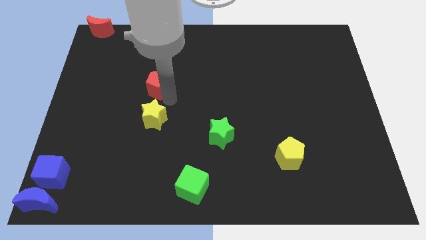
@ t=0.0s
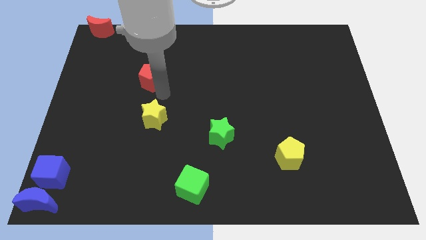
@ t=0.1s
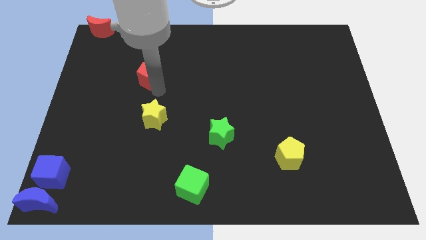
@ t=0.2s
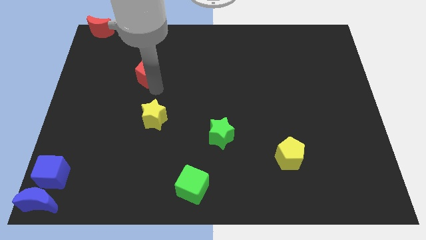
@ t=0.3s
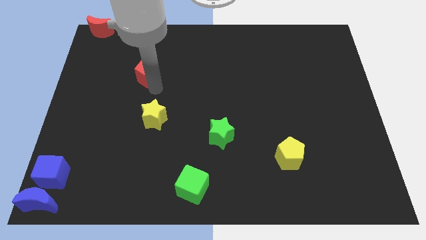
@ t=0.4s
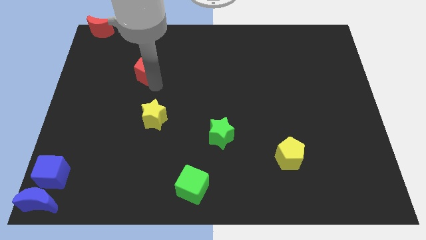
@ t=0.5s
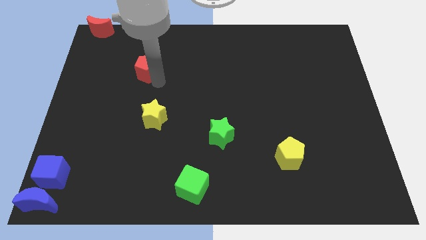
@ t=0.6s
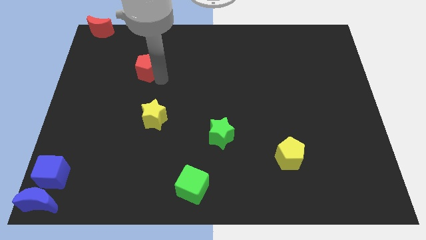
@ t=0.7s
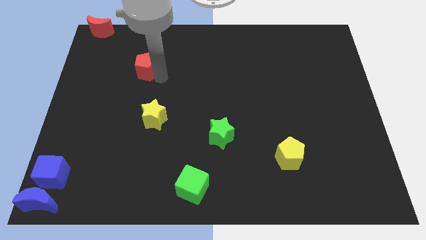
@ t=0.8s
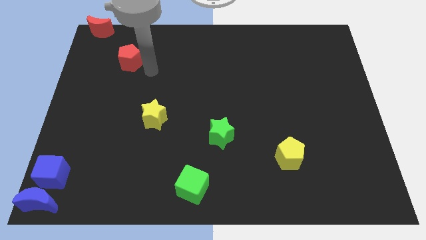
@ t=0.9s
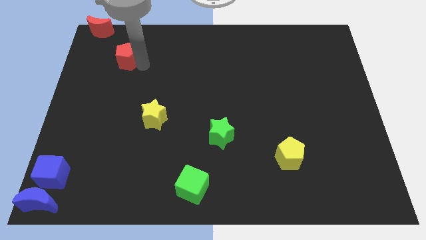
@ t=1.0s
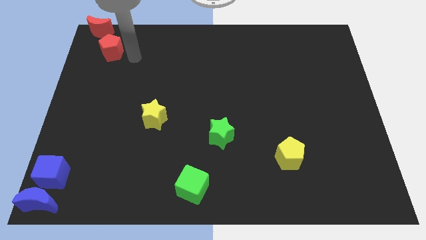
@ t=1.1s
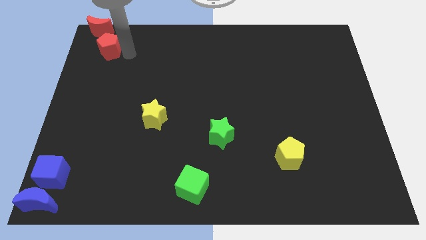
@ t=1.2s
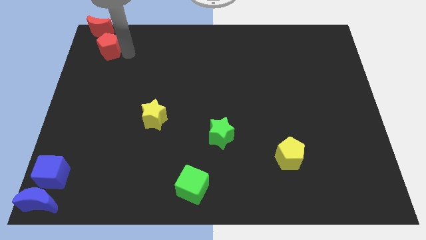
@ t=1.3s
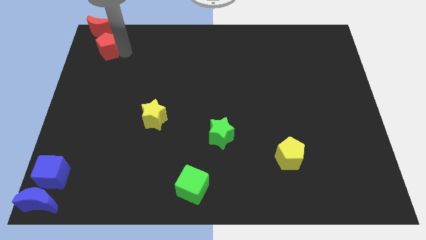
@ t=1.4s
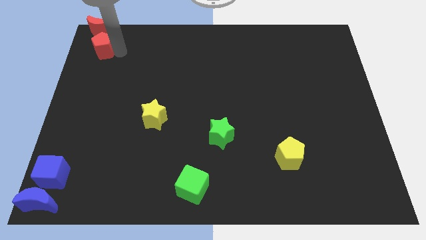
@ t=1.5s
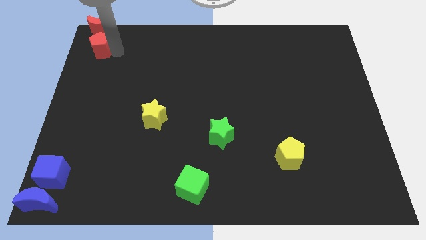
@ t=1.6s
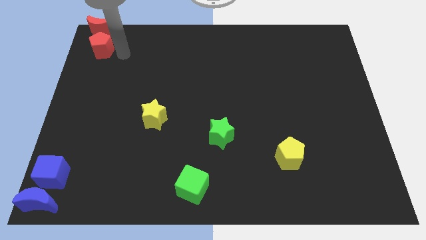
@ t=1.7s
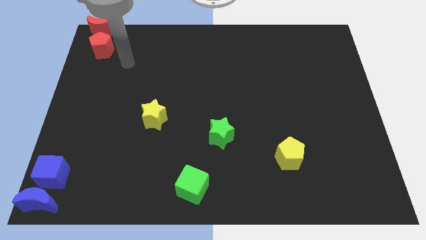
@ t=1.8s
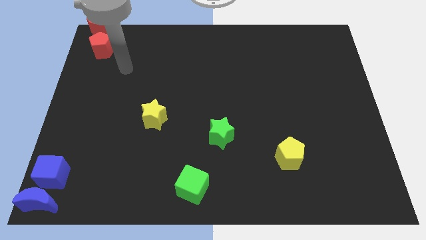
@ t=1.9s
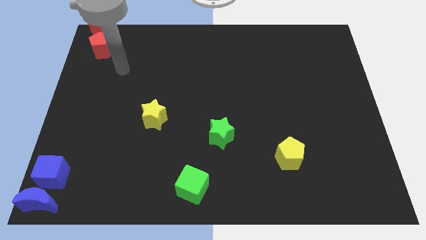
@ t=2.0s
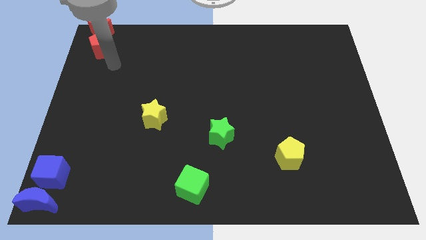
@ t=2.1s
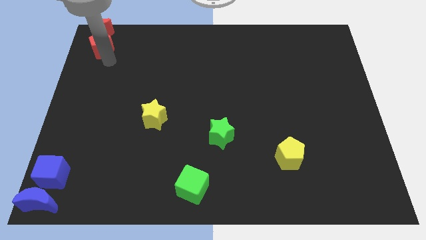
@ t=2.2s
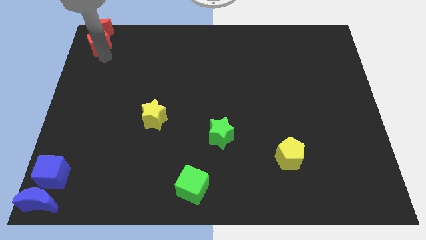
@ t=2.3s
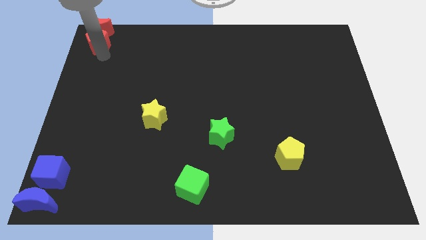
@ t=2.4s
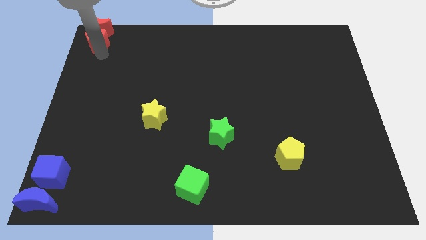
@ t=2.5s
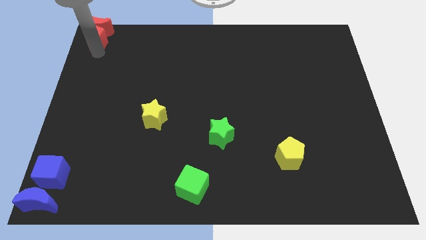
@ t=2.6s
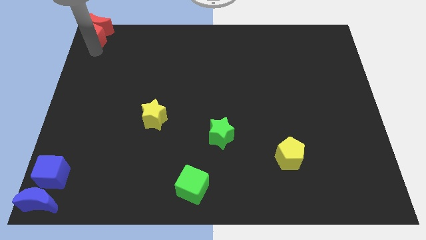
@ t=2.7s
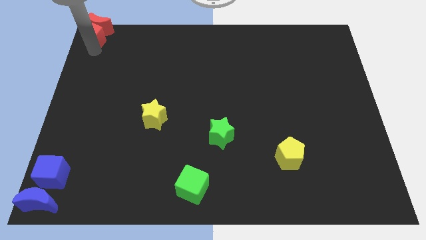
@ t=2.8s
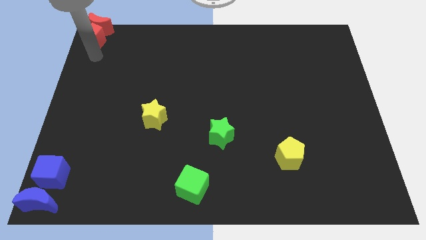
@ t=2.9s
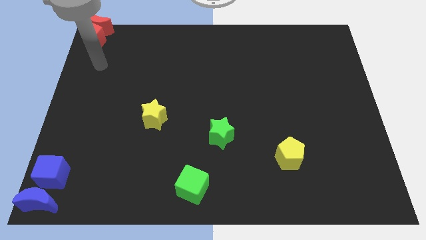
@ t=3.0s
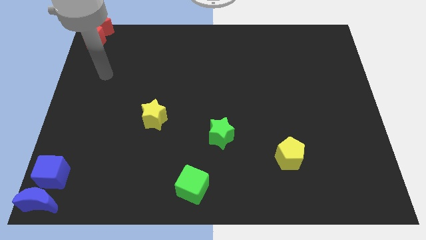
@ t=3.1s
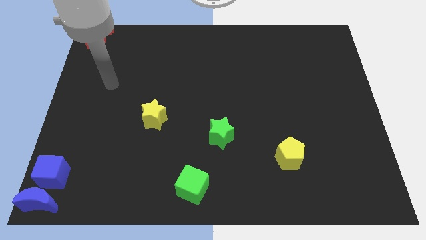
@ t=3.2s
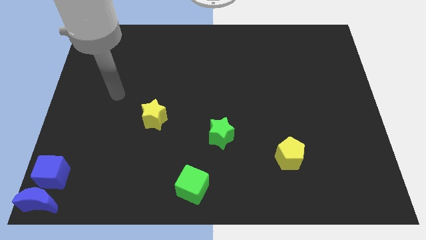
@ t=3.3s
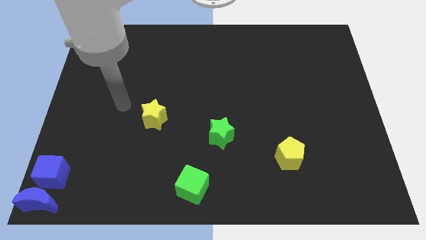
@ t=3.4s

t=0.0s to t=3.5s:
push red pentagon in to red moon

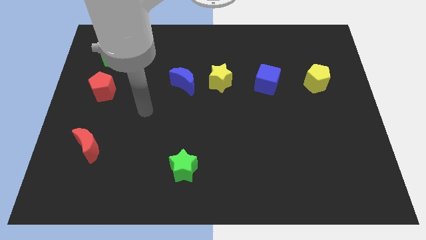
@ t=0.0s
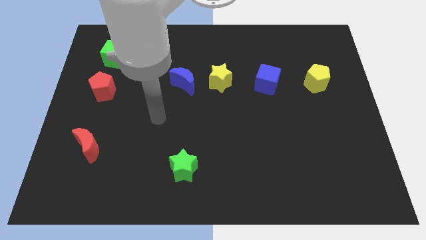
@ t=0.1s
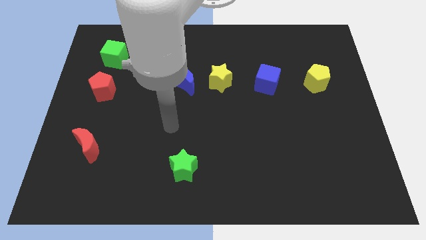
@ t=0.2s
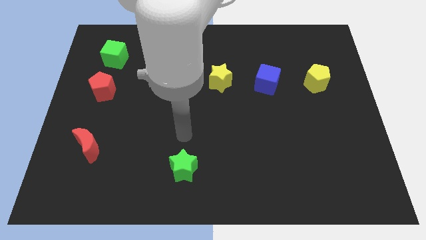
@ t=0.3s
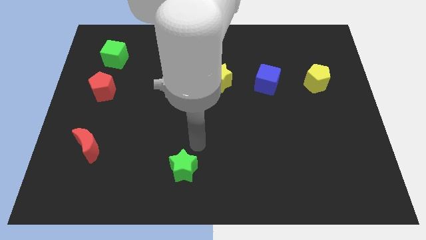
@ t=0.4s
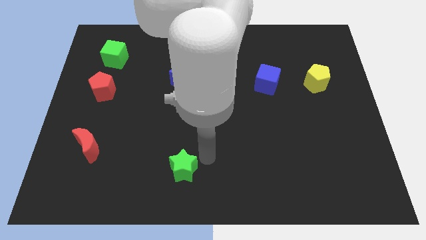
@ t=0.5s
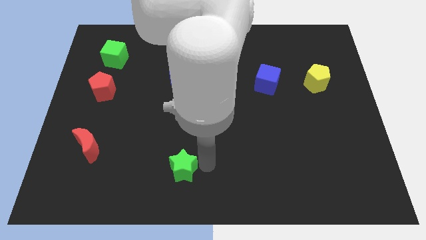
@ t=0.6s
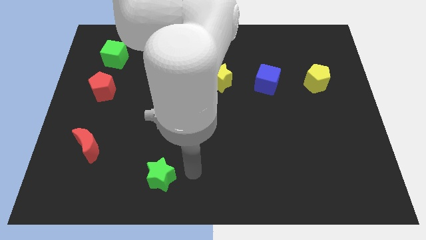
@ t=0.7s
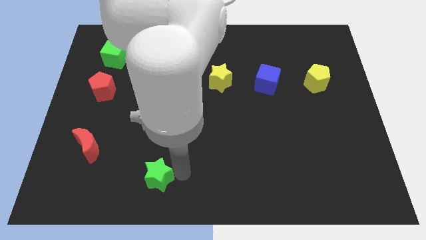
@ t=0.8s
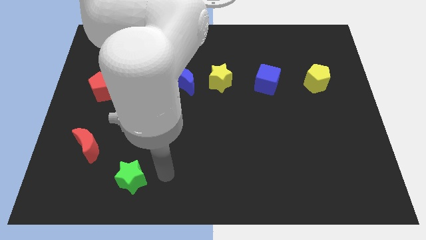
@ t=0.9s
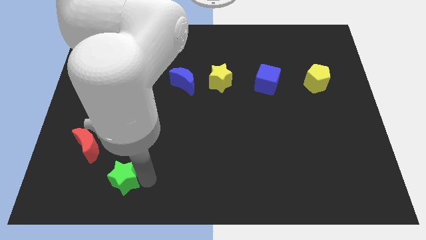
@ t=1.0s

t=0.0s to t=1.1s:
push the green star towards the left side of the board

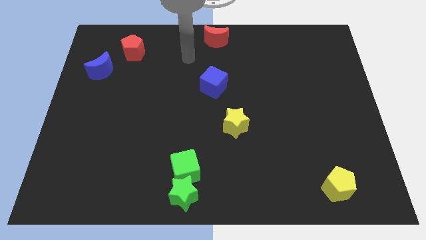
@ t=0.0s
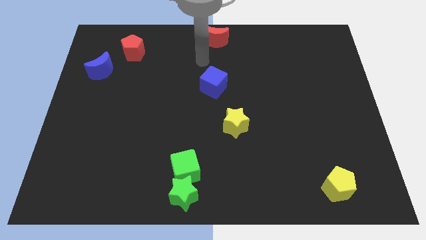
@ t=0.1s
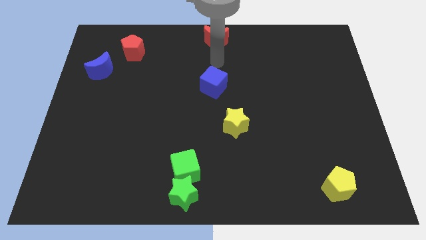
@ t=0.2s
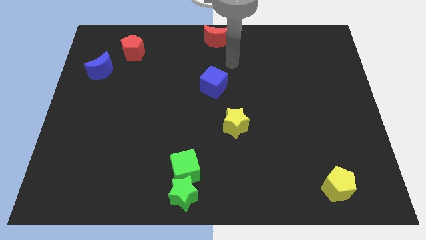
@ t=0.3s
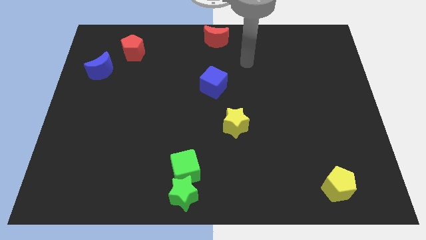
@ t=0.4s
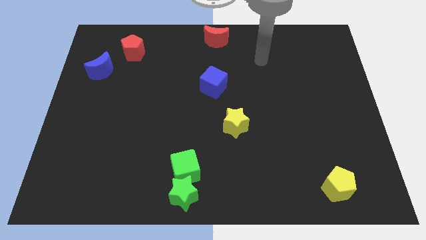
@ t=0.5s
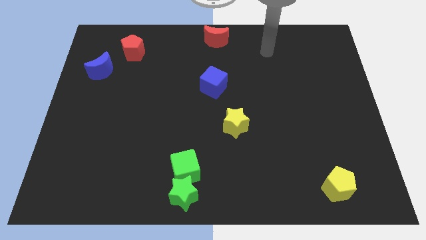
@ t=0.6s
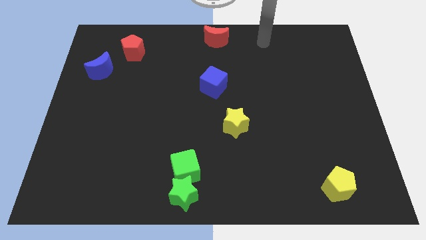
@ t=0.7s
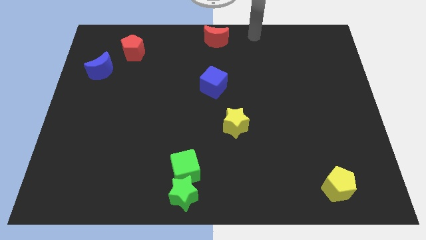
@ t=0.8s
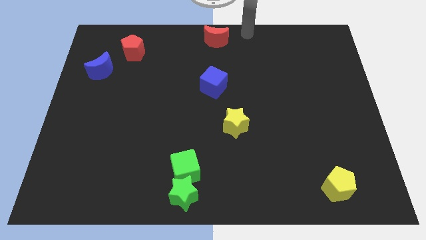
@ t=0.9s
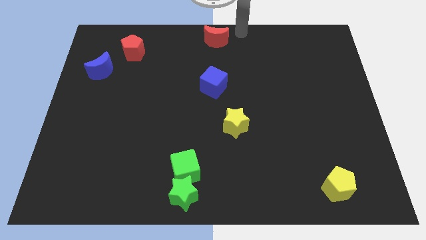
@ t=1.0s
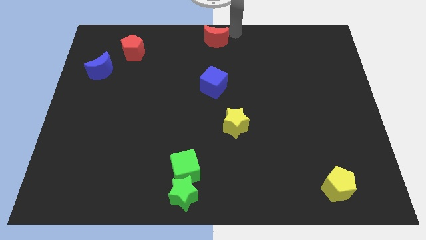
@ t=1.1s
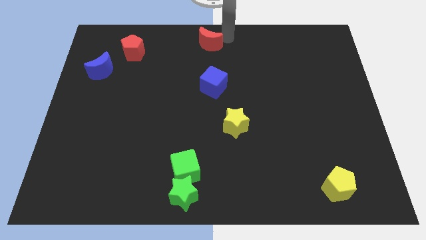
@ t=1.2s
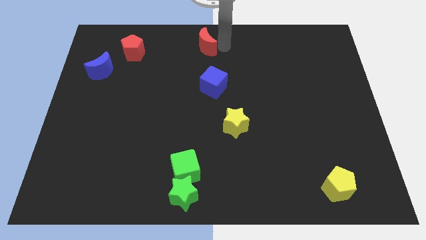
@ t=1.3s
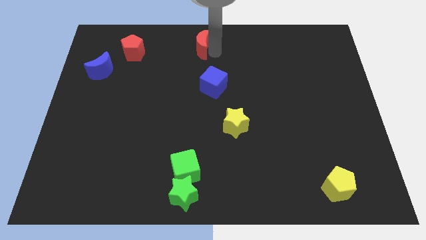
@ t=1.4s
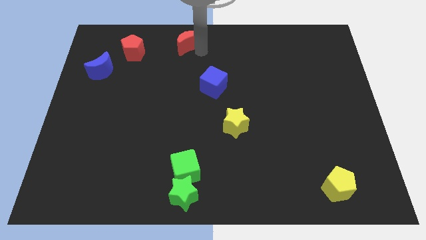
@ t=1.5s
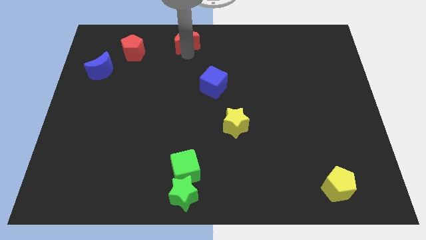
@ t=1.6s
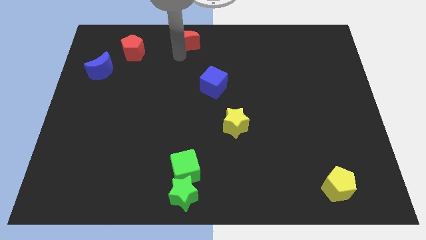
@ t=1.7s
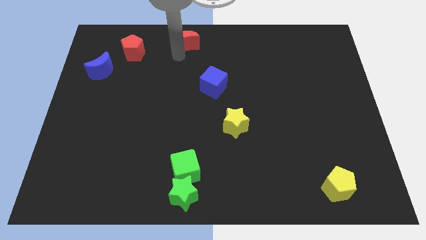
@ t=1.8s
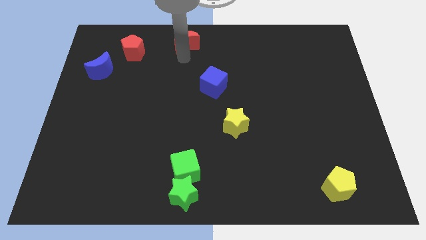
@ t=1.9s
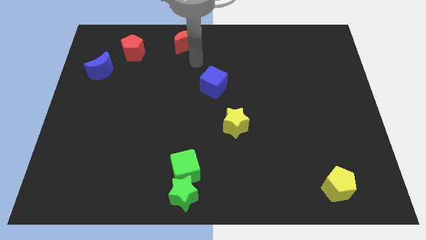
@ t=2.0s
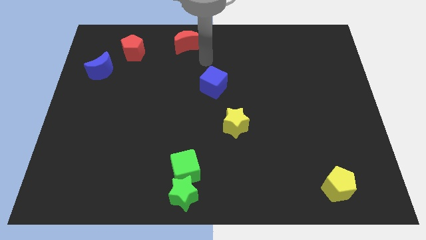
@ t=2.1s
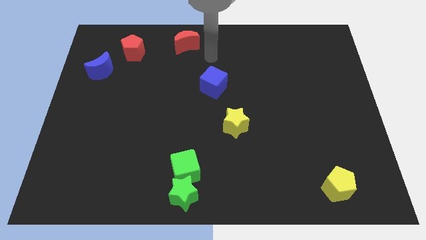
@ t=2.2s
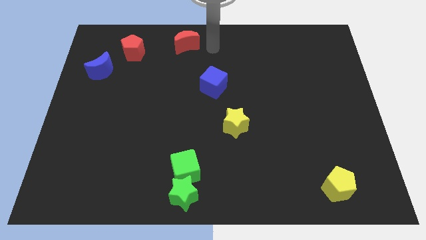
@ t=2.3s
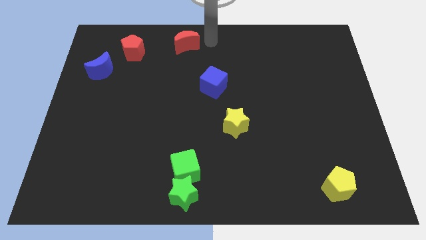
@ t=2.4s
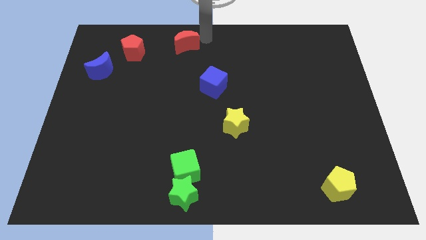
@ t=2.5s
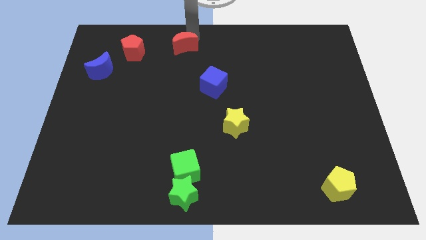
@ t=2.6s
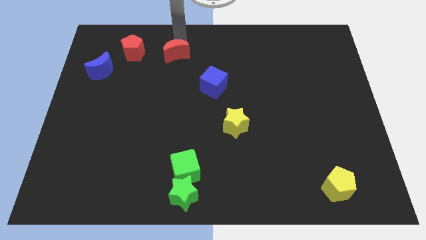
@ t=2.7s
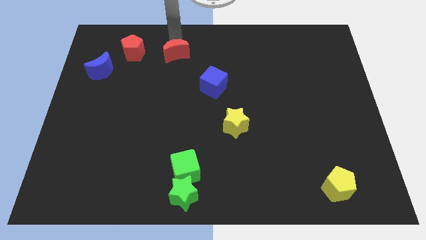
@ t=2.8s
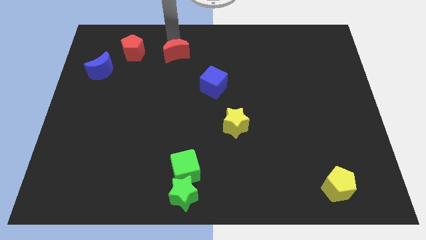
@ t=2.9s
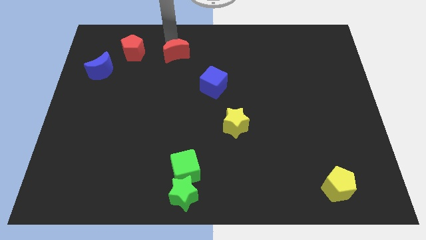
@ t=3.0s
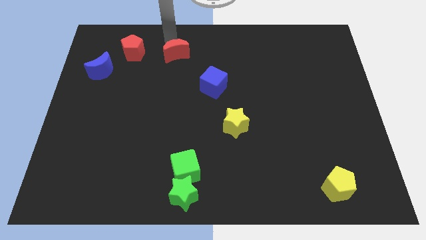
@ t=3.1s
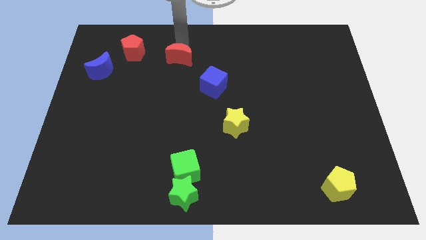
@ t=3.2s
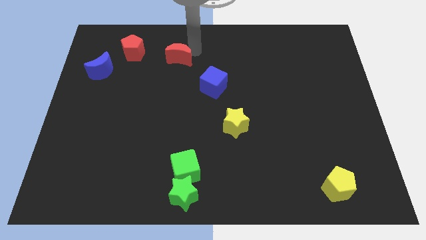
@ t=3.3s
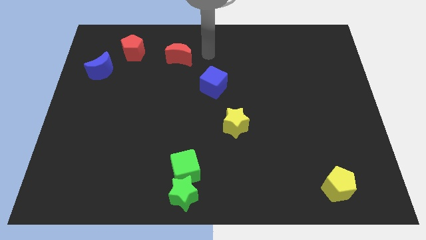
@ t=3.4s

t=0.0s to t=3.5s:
move the red crescent to the right of the red pentagon

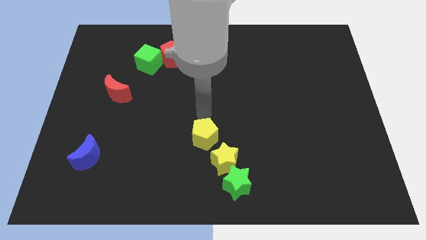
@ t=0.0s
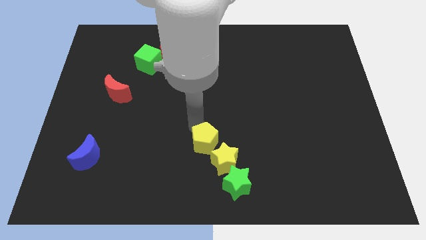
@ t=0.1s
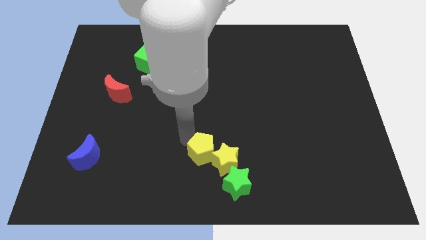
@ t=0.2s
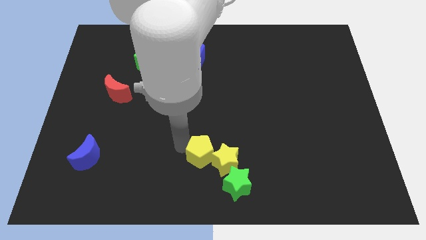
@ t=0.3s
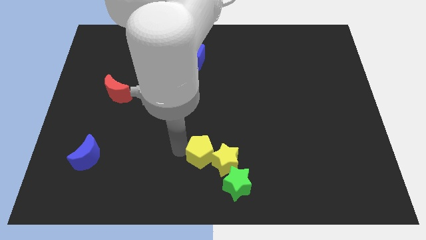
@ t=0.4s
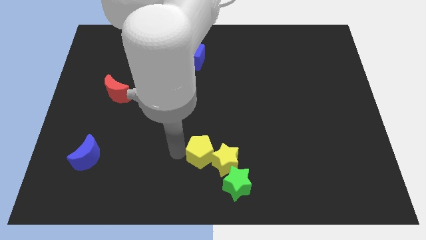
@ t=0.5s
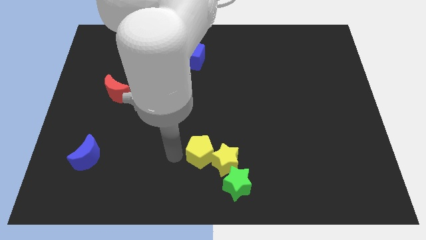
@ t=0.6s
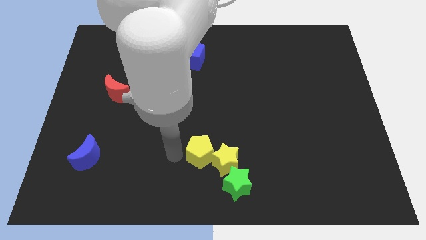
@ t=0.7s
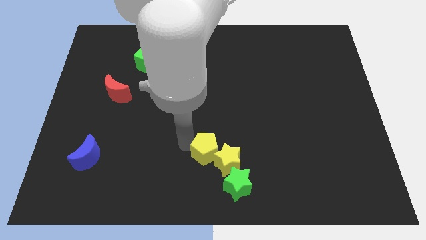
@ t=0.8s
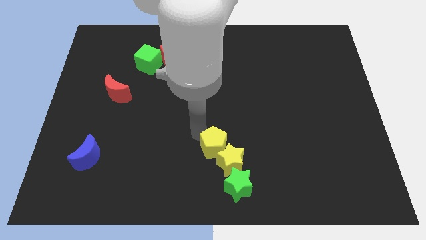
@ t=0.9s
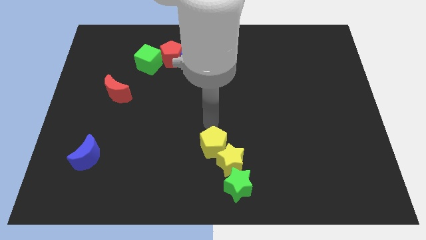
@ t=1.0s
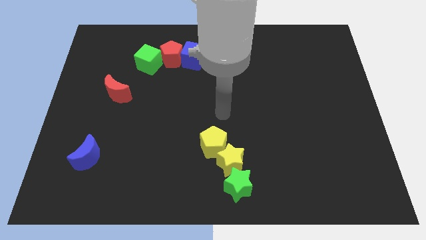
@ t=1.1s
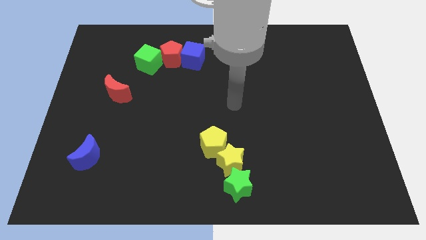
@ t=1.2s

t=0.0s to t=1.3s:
put the yellow pentagon at the top left of the yellow star
